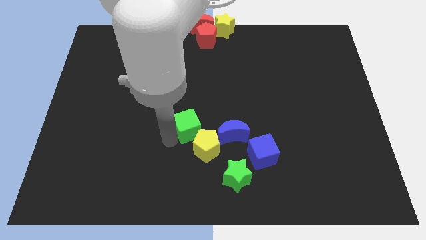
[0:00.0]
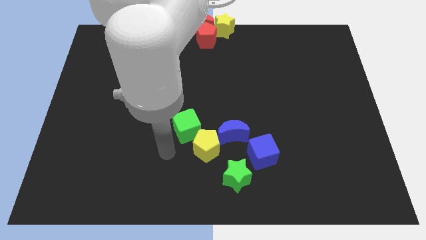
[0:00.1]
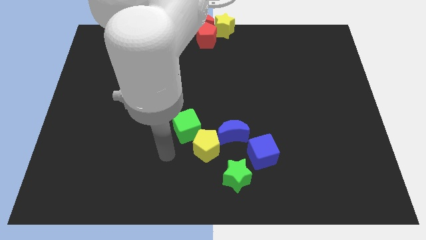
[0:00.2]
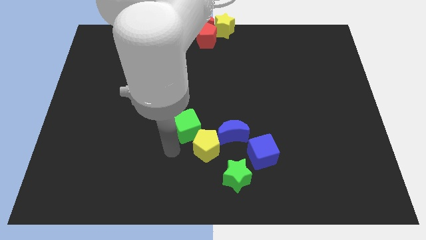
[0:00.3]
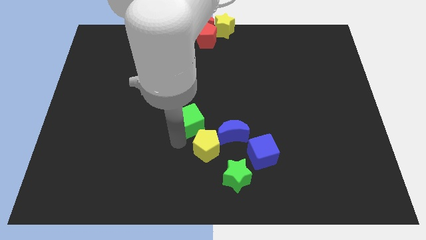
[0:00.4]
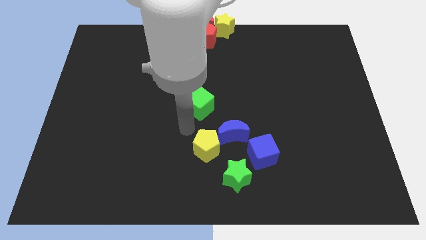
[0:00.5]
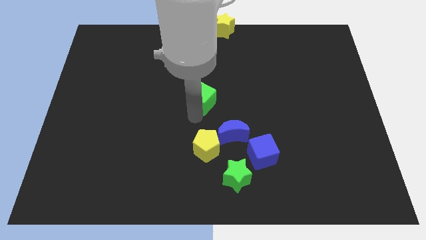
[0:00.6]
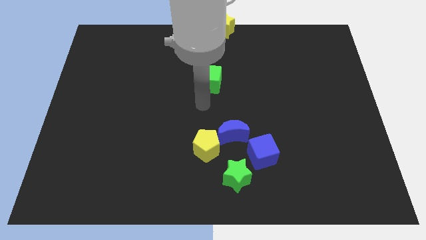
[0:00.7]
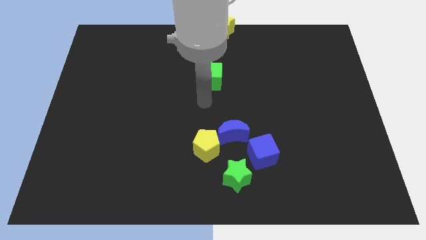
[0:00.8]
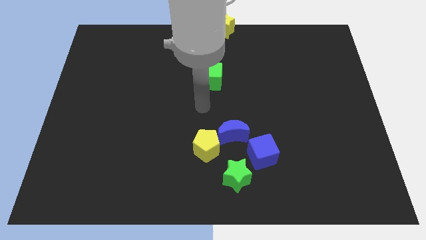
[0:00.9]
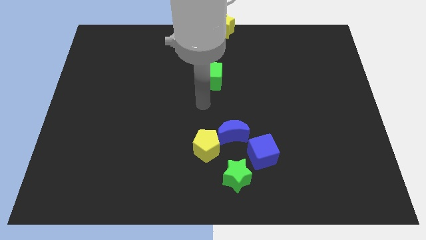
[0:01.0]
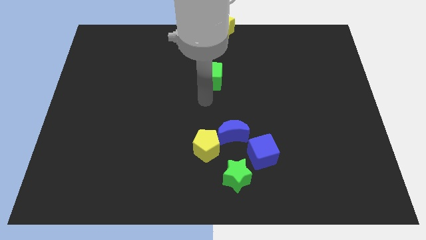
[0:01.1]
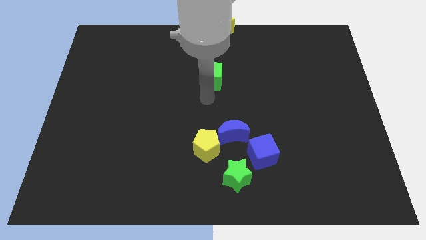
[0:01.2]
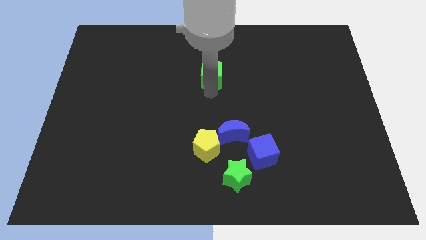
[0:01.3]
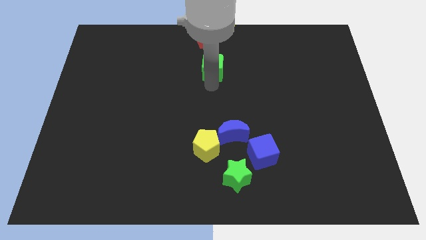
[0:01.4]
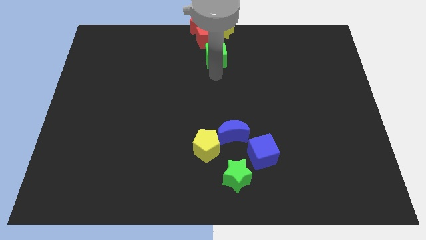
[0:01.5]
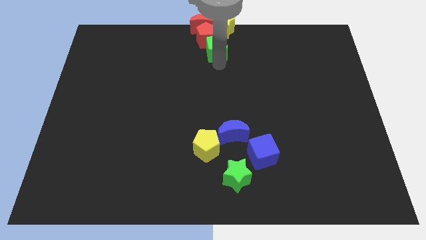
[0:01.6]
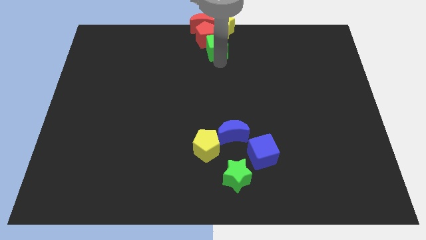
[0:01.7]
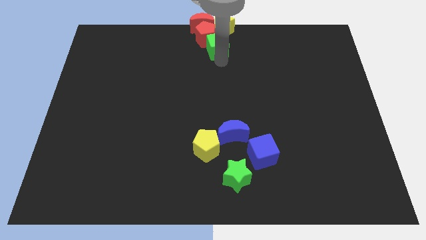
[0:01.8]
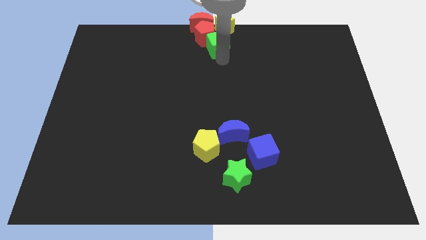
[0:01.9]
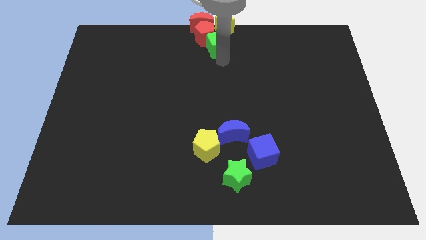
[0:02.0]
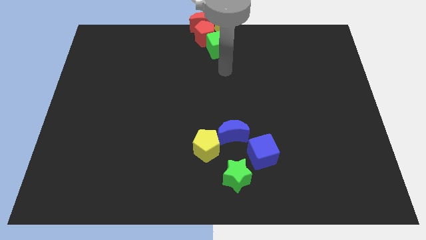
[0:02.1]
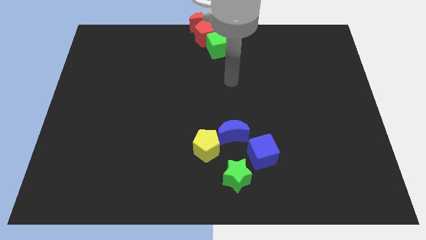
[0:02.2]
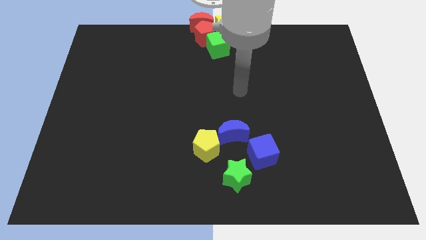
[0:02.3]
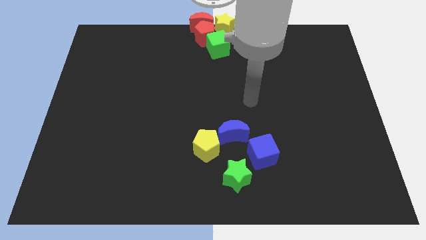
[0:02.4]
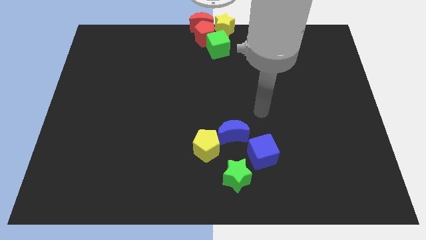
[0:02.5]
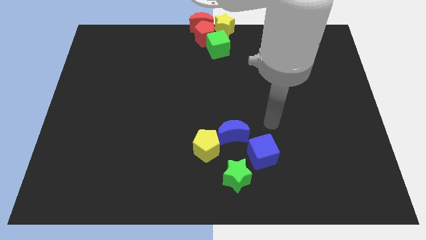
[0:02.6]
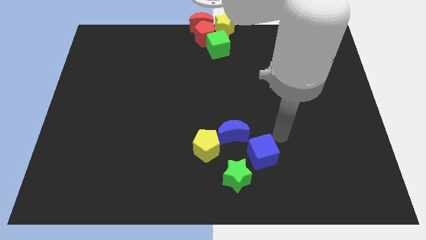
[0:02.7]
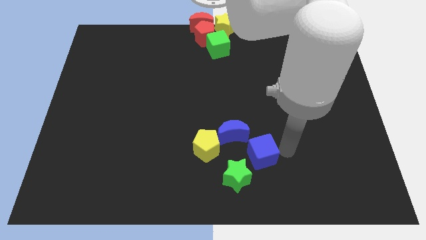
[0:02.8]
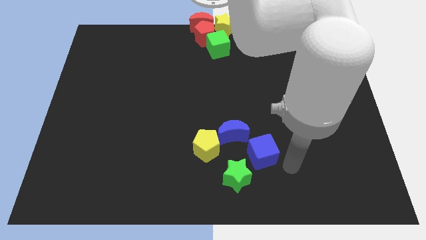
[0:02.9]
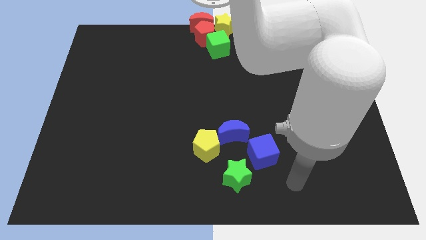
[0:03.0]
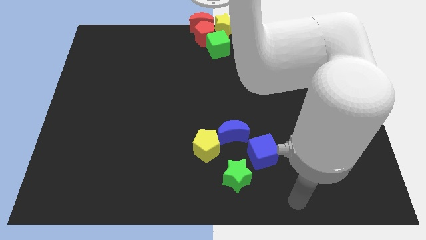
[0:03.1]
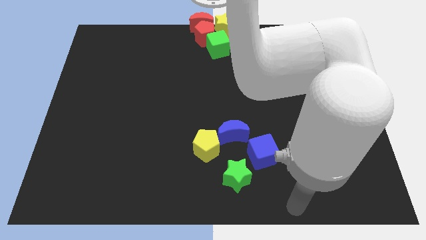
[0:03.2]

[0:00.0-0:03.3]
push the green cube below the red penatgon

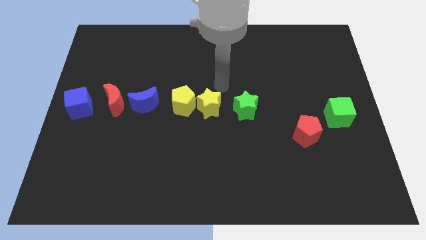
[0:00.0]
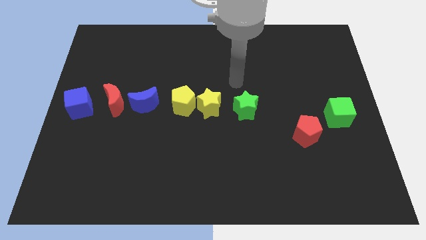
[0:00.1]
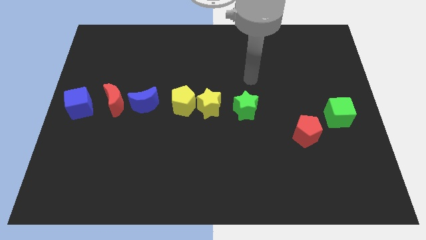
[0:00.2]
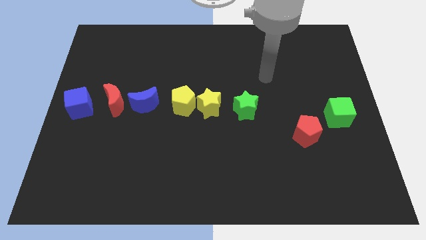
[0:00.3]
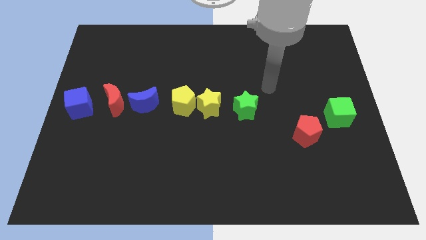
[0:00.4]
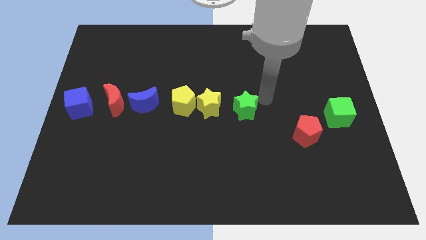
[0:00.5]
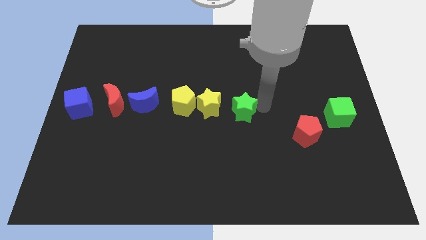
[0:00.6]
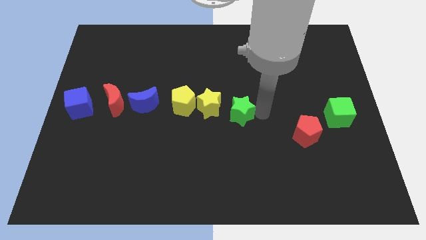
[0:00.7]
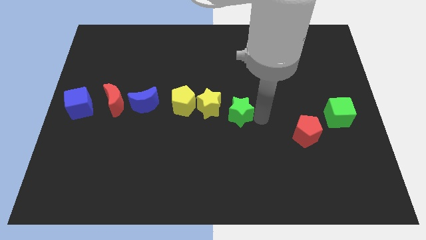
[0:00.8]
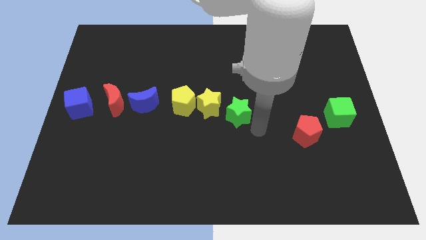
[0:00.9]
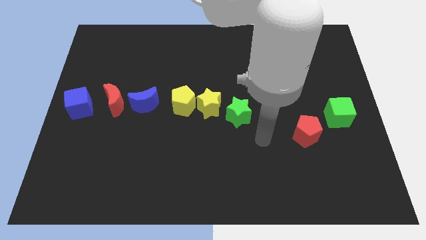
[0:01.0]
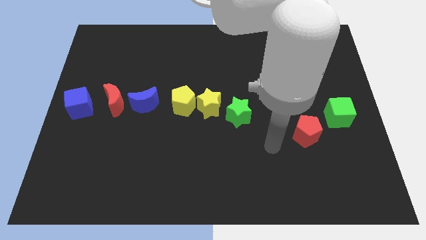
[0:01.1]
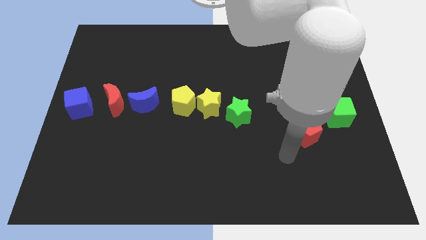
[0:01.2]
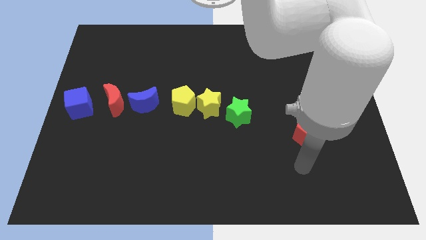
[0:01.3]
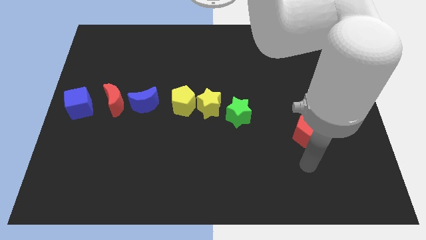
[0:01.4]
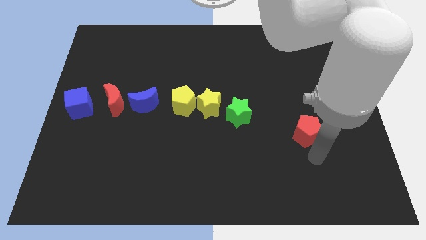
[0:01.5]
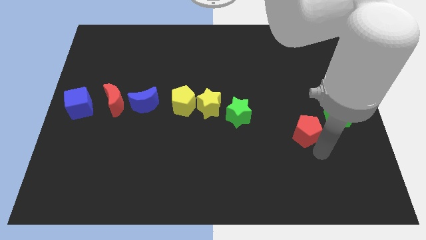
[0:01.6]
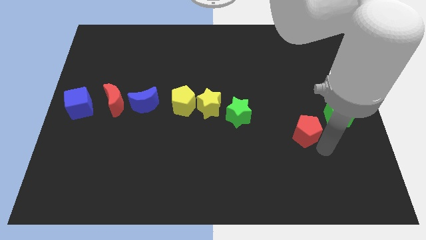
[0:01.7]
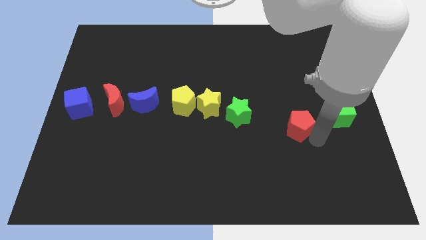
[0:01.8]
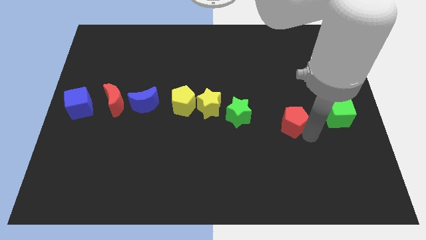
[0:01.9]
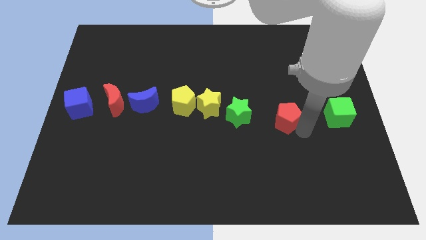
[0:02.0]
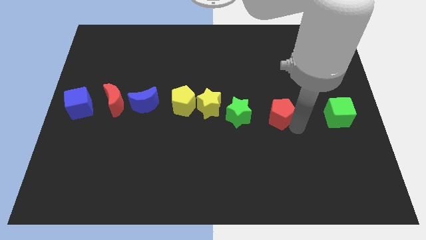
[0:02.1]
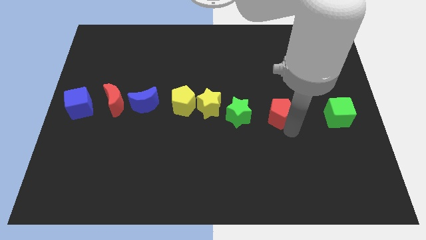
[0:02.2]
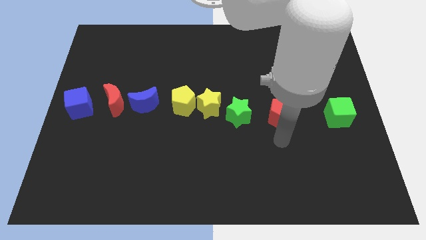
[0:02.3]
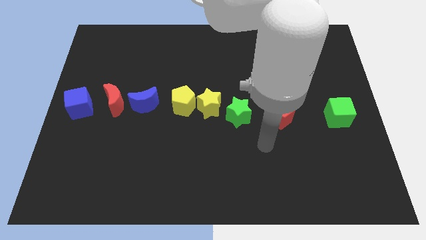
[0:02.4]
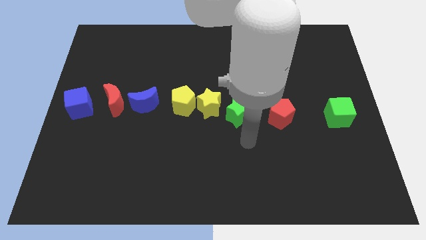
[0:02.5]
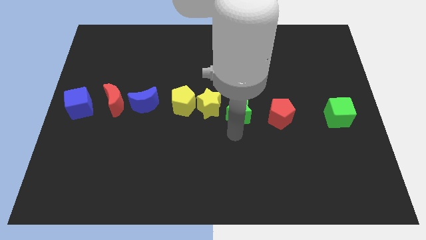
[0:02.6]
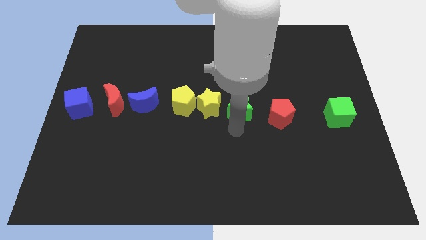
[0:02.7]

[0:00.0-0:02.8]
push the red pentagon to the left of the green cube

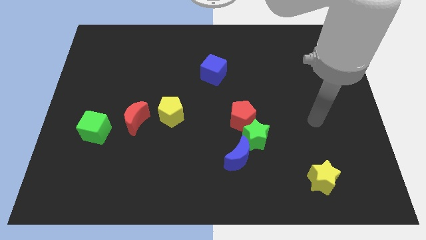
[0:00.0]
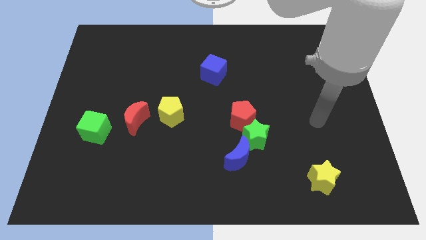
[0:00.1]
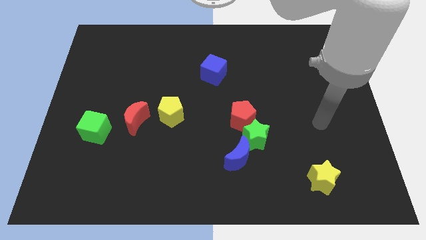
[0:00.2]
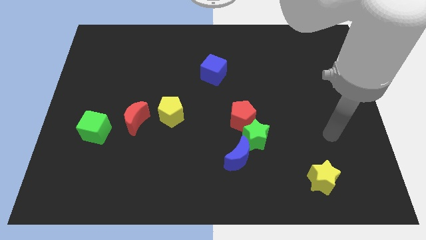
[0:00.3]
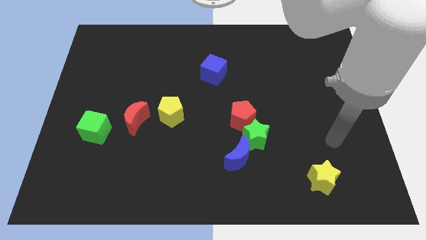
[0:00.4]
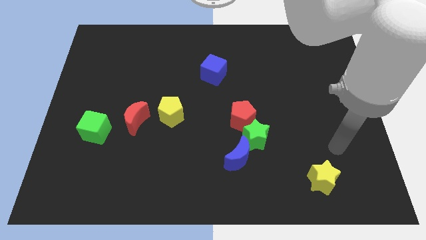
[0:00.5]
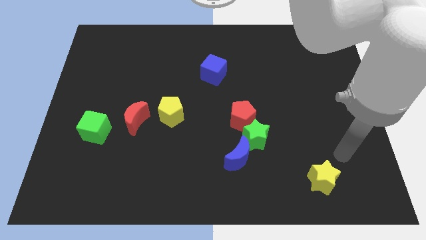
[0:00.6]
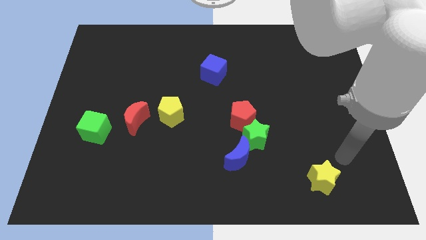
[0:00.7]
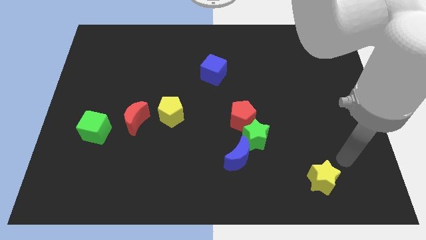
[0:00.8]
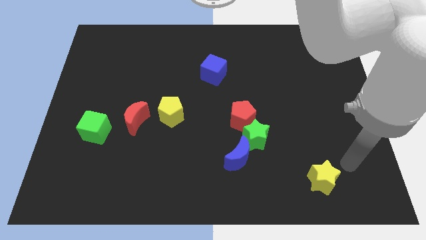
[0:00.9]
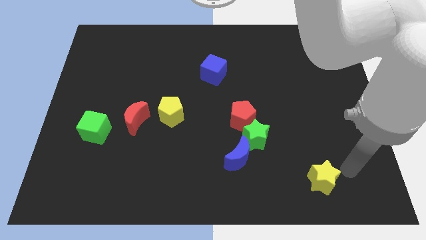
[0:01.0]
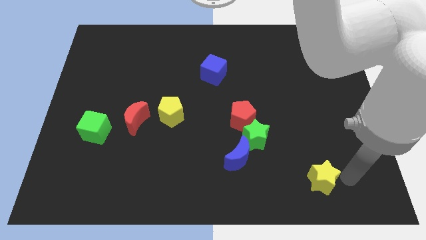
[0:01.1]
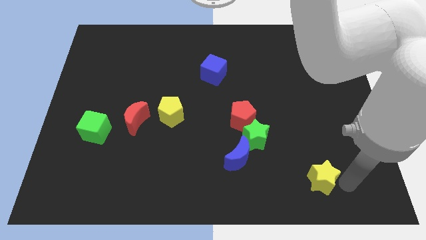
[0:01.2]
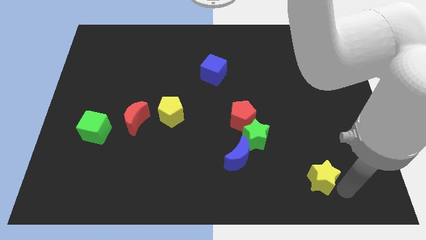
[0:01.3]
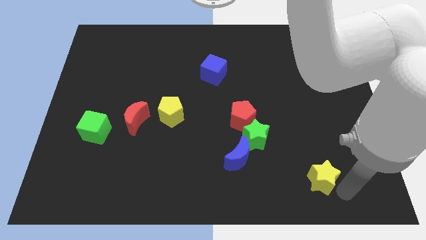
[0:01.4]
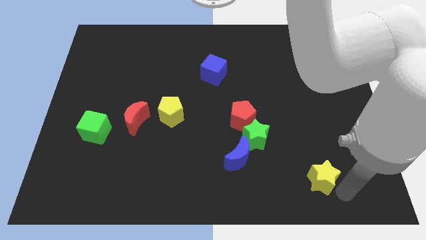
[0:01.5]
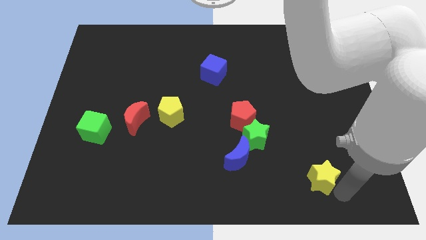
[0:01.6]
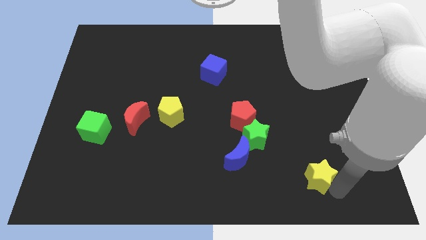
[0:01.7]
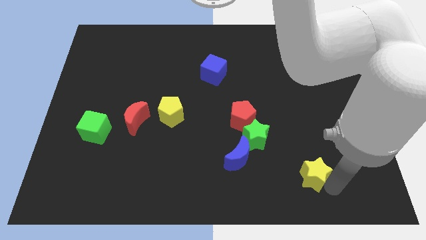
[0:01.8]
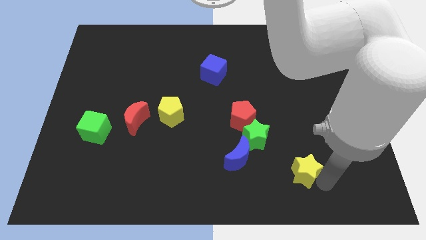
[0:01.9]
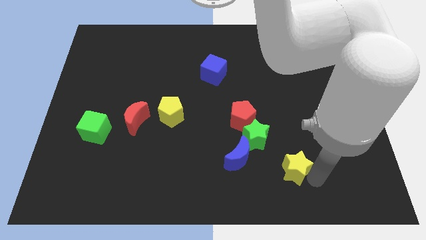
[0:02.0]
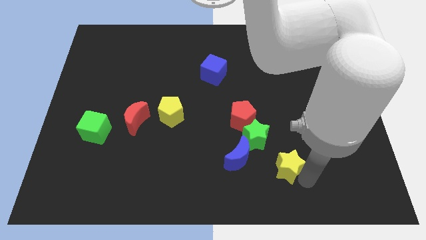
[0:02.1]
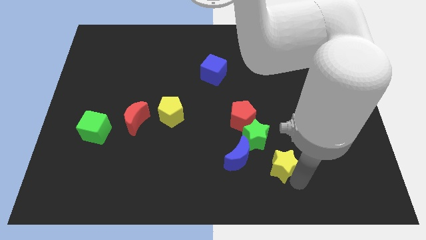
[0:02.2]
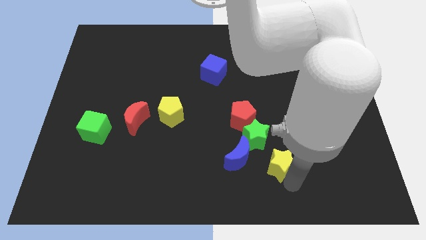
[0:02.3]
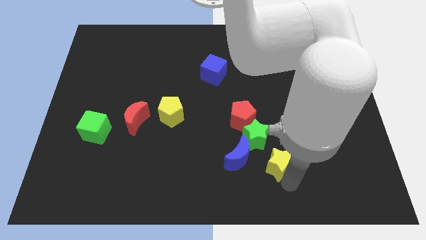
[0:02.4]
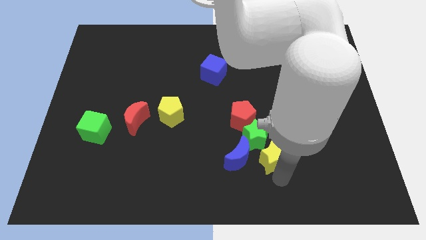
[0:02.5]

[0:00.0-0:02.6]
push the yellow star close to the green star

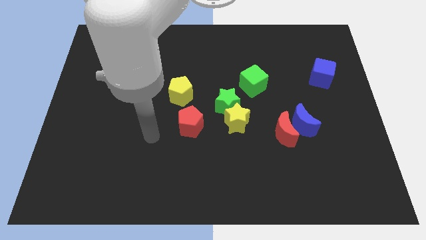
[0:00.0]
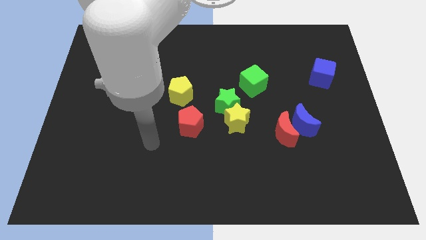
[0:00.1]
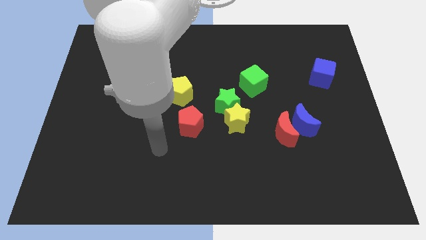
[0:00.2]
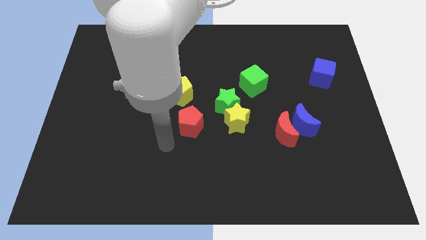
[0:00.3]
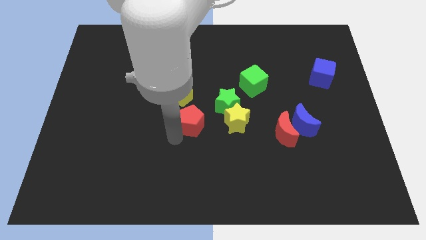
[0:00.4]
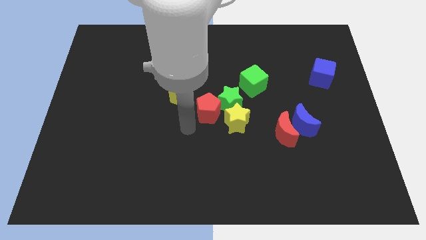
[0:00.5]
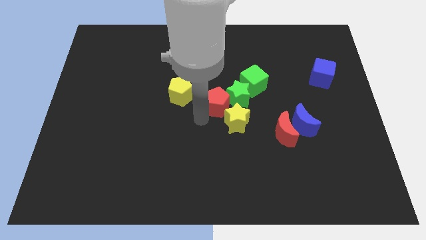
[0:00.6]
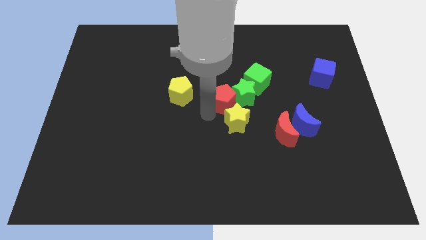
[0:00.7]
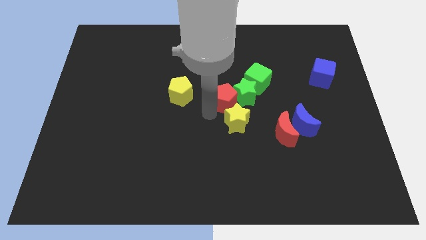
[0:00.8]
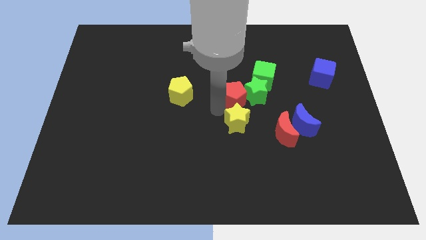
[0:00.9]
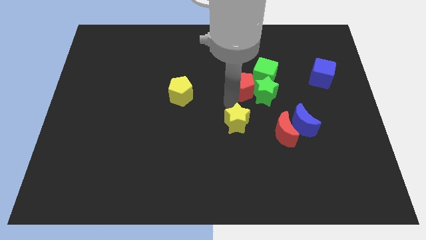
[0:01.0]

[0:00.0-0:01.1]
separate red pentagon from yellow pentagon
